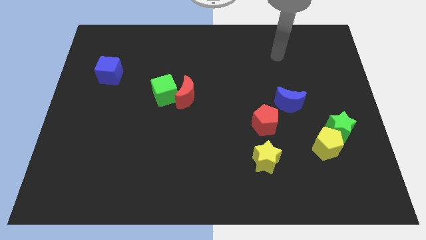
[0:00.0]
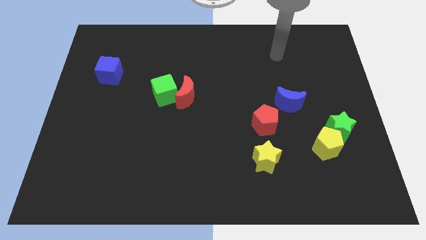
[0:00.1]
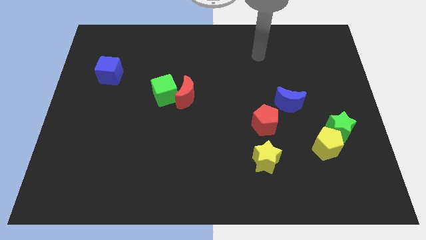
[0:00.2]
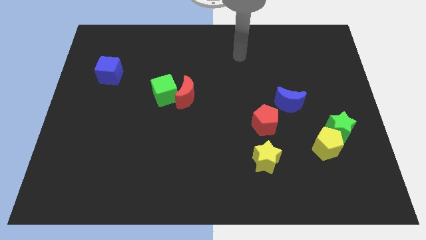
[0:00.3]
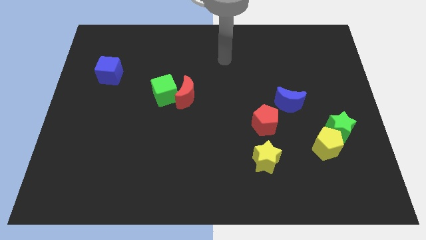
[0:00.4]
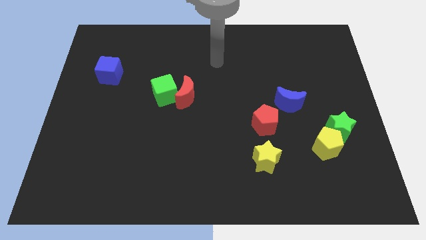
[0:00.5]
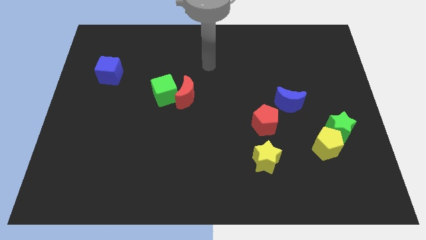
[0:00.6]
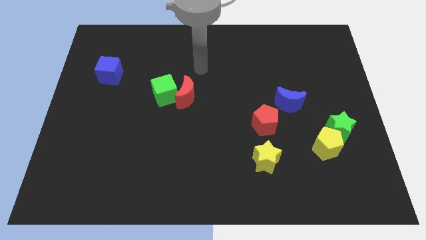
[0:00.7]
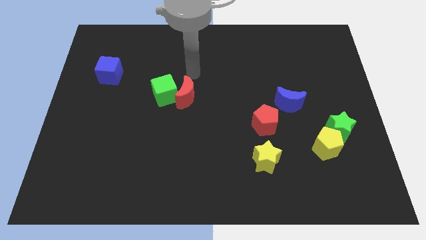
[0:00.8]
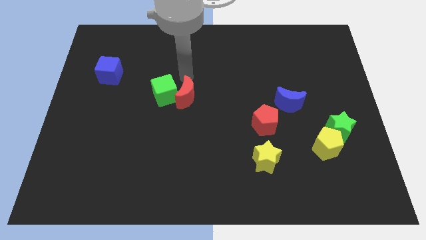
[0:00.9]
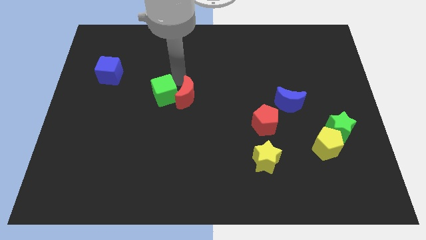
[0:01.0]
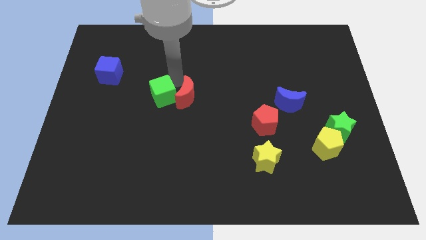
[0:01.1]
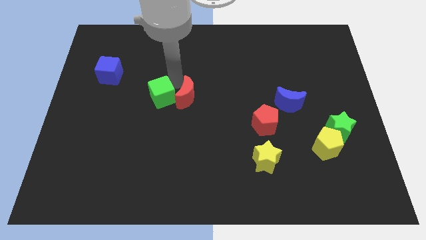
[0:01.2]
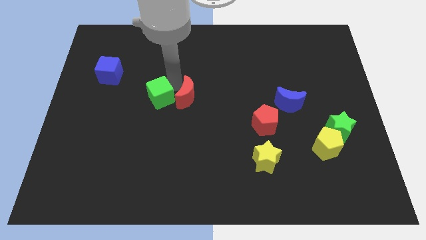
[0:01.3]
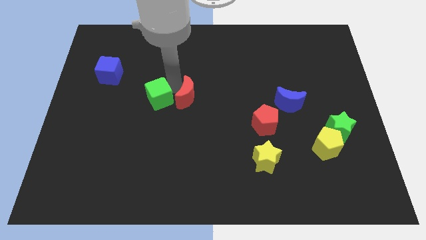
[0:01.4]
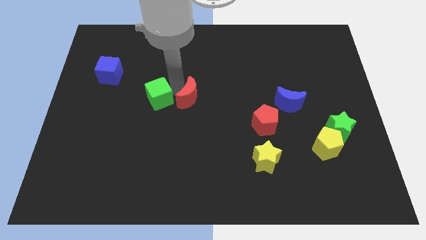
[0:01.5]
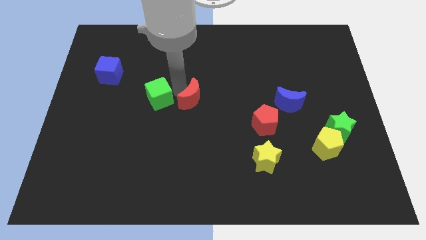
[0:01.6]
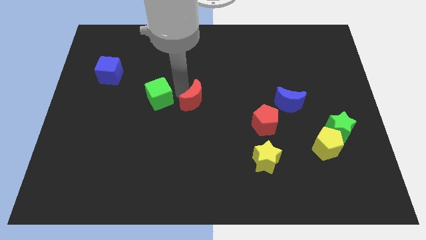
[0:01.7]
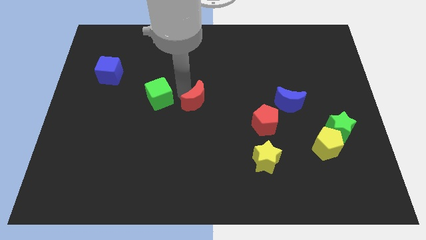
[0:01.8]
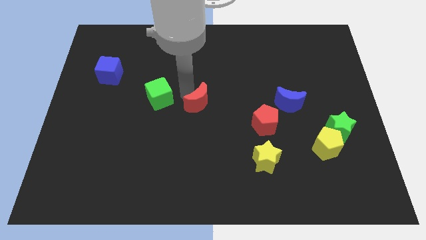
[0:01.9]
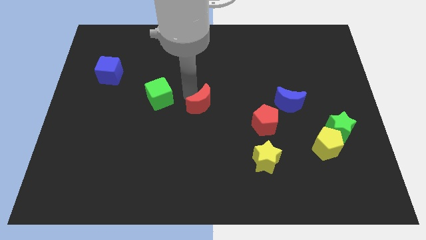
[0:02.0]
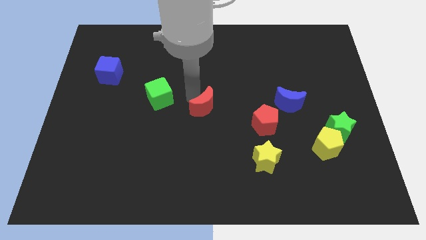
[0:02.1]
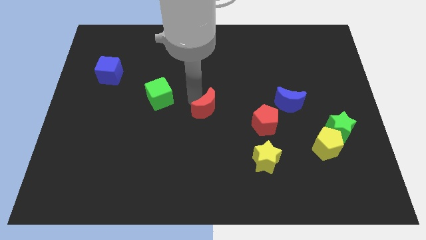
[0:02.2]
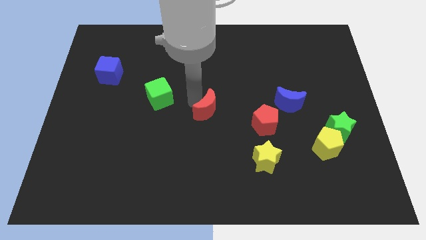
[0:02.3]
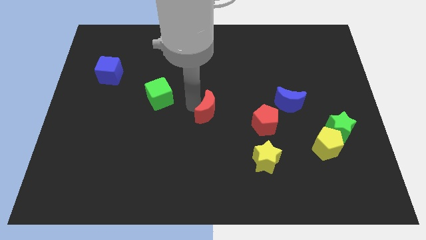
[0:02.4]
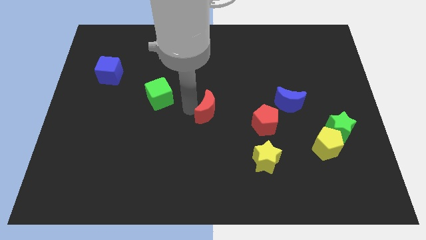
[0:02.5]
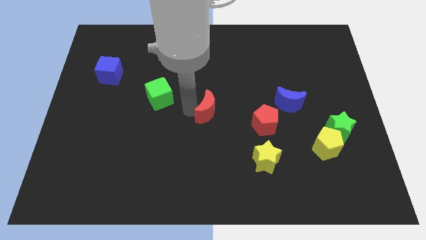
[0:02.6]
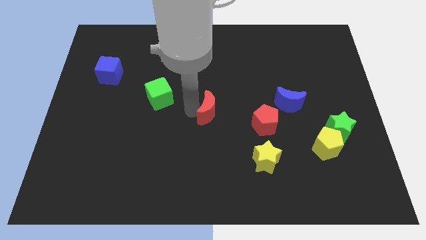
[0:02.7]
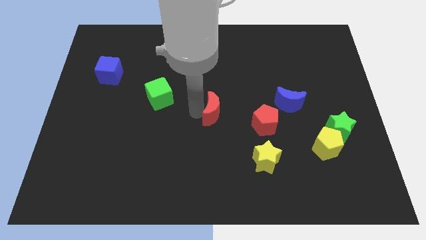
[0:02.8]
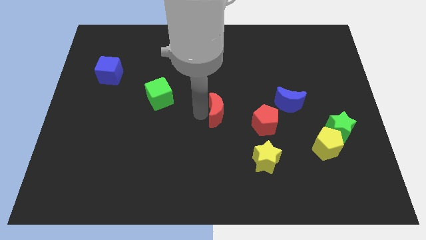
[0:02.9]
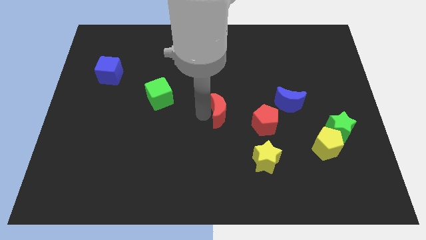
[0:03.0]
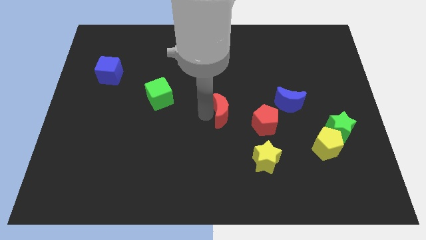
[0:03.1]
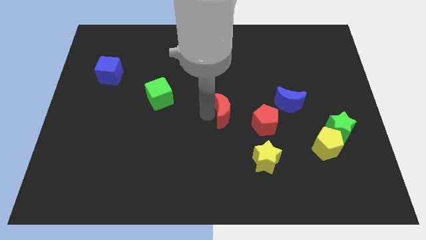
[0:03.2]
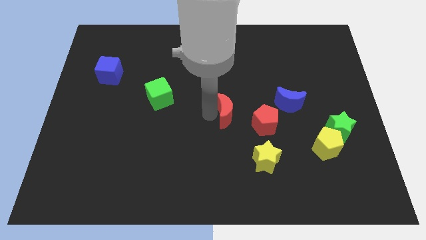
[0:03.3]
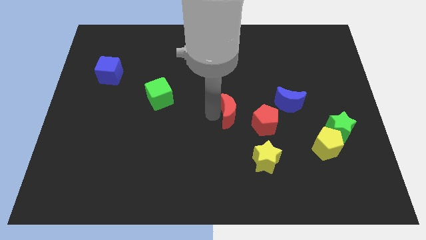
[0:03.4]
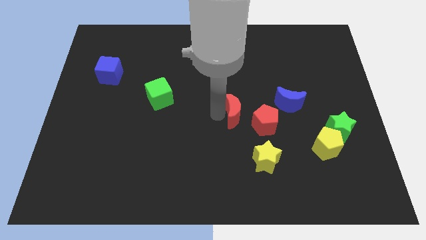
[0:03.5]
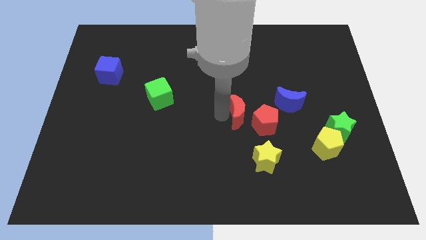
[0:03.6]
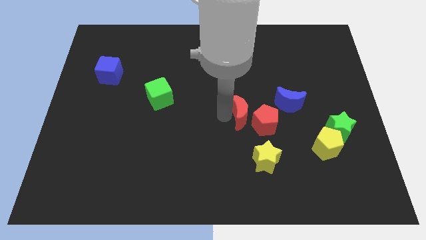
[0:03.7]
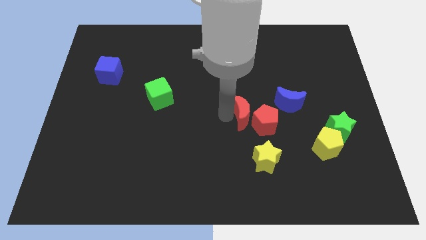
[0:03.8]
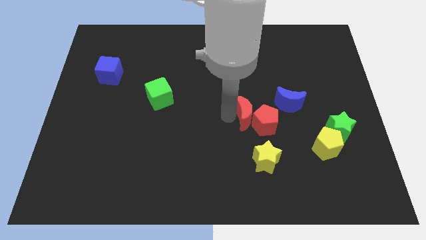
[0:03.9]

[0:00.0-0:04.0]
put the red moon to the red pentagon

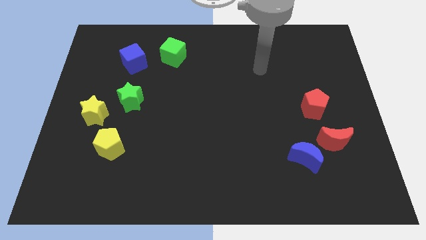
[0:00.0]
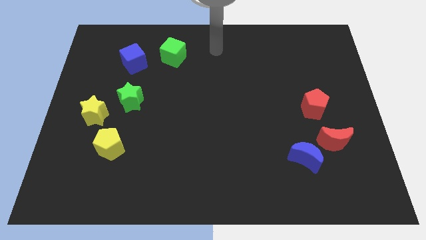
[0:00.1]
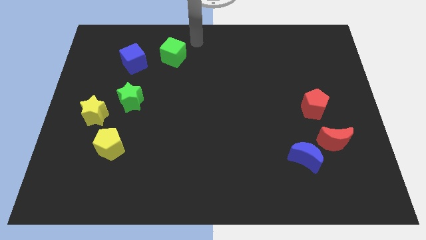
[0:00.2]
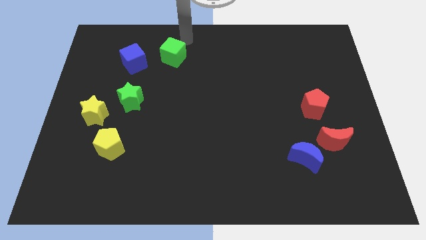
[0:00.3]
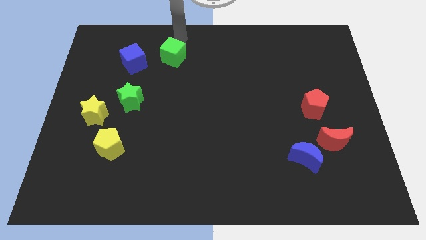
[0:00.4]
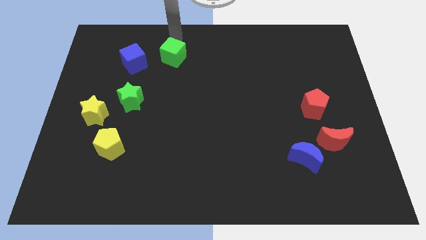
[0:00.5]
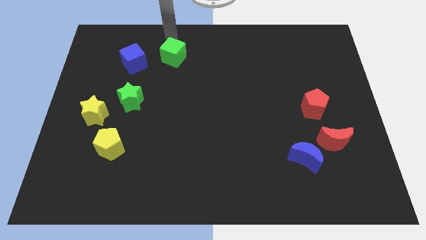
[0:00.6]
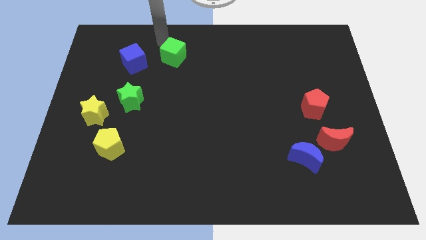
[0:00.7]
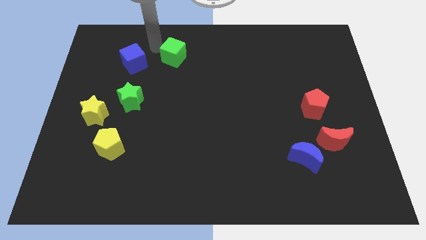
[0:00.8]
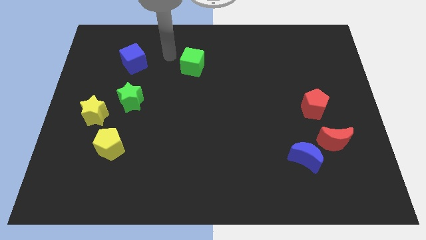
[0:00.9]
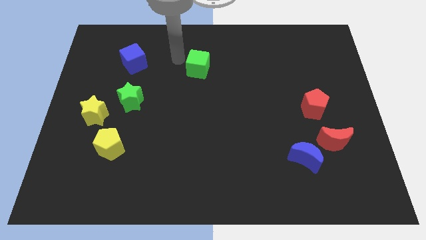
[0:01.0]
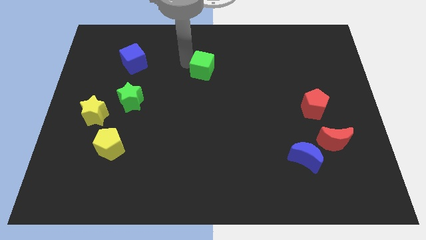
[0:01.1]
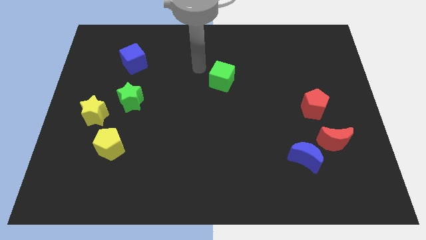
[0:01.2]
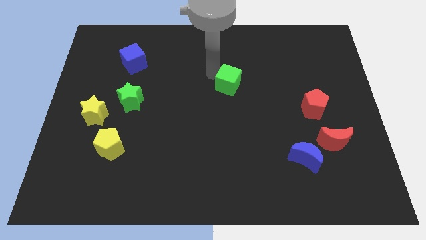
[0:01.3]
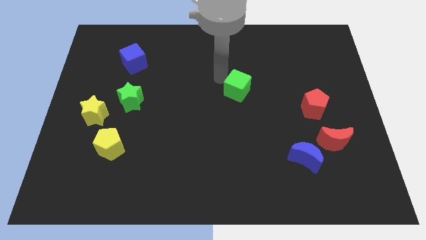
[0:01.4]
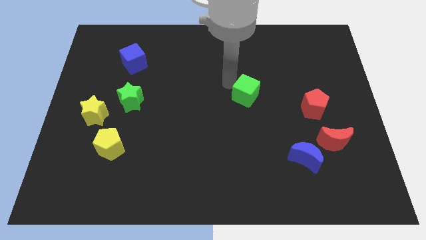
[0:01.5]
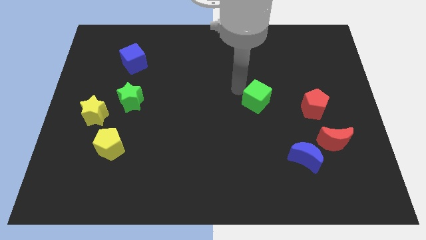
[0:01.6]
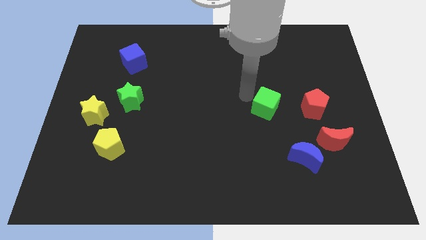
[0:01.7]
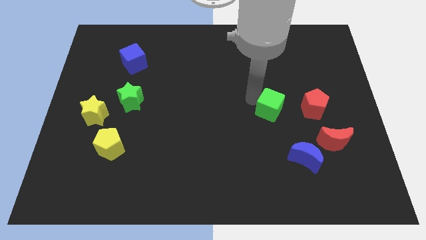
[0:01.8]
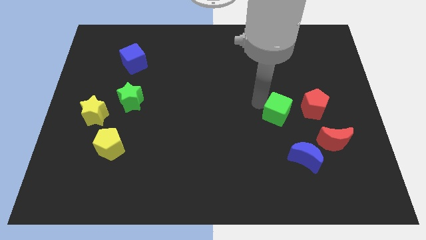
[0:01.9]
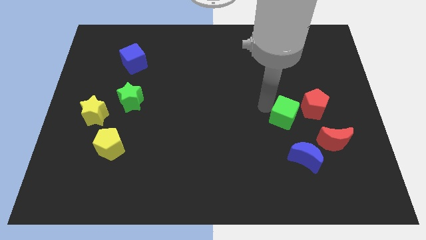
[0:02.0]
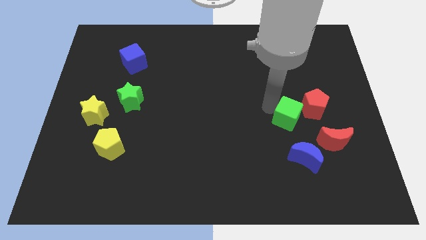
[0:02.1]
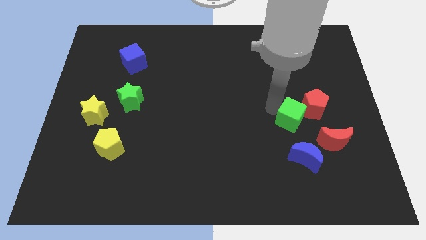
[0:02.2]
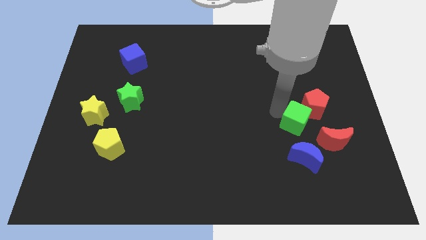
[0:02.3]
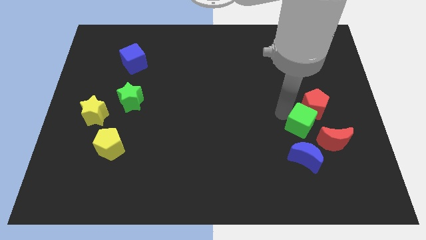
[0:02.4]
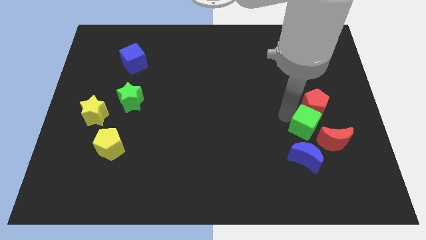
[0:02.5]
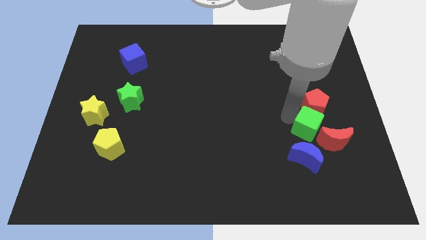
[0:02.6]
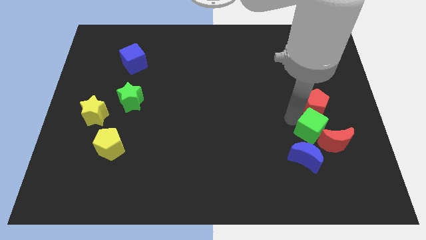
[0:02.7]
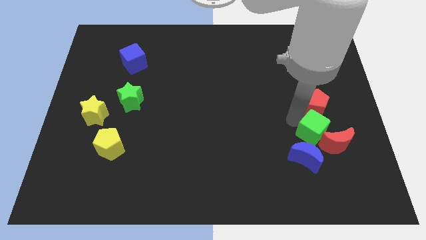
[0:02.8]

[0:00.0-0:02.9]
slide the green cube to the red moon

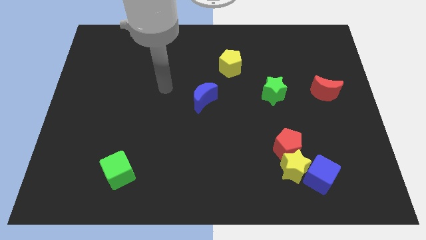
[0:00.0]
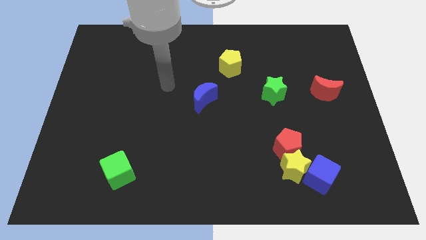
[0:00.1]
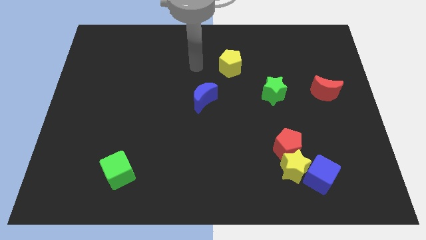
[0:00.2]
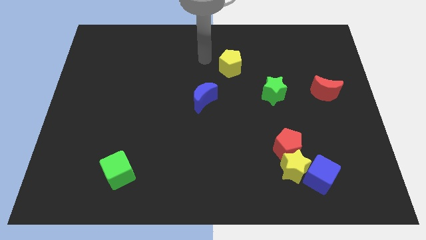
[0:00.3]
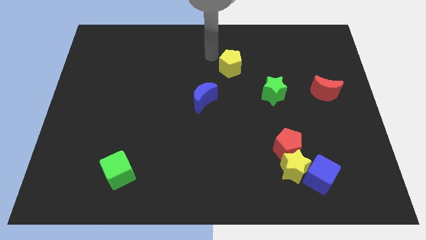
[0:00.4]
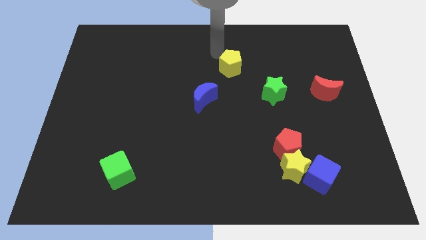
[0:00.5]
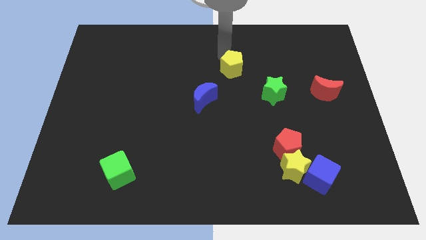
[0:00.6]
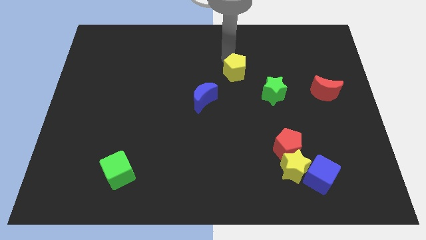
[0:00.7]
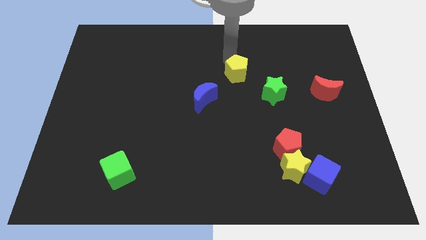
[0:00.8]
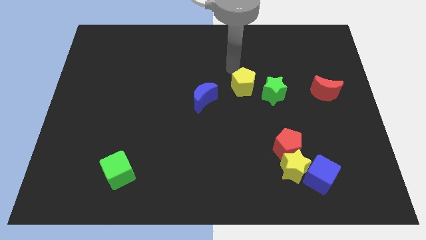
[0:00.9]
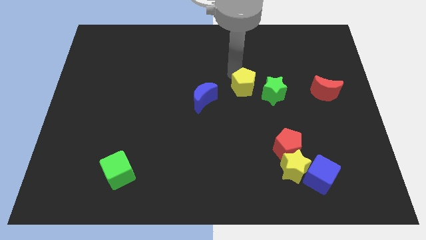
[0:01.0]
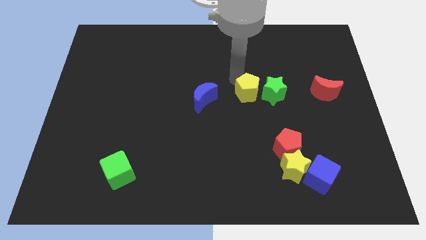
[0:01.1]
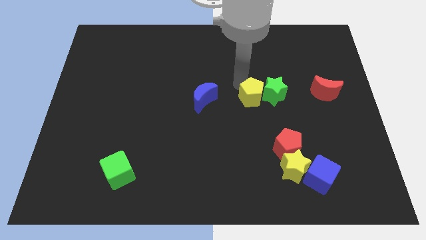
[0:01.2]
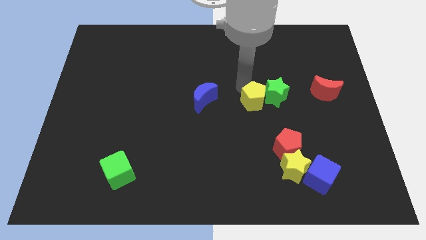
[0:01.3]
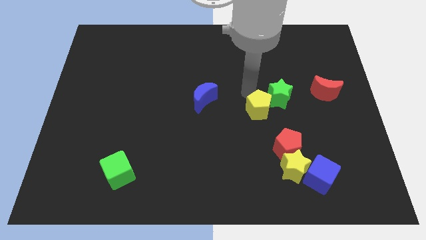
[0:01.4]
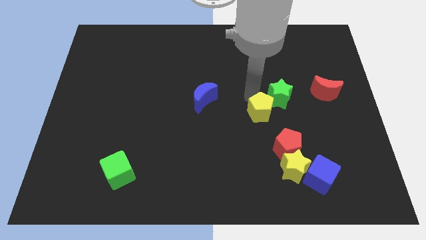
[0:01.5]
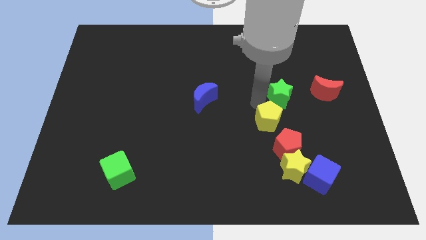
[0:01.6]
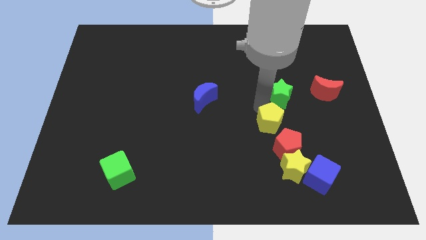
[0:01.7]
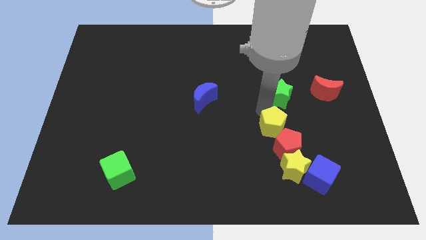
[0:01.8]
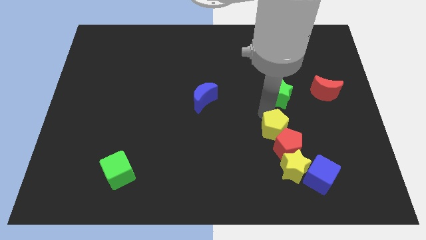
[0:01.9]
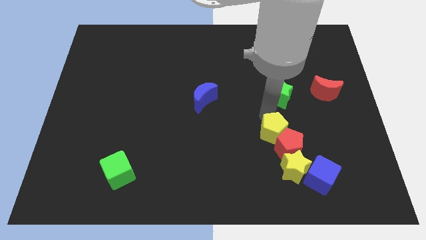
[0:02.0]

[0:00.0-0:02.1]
put the yellow pentagon close to the red pentagon
